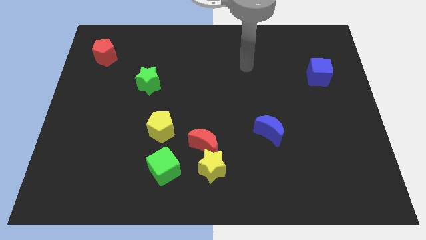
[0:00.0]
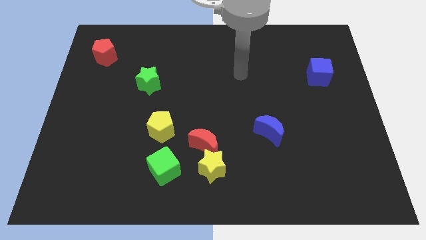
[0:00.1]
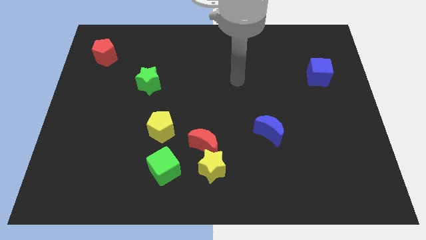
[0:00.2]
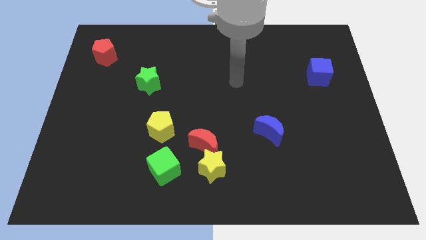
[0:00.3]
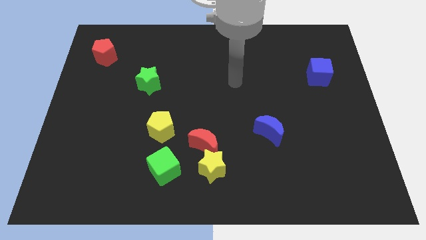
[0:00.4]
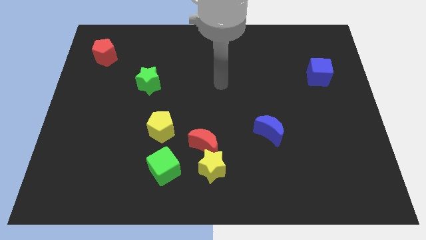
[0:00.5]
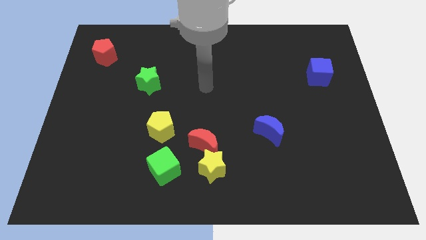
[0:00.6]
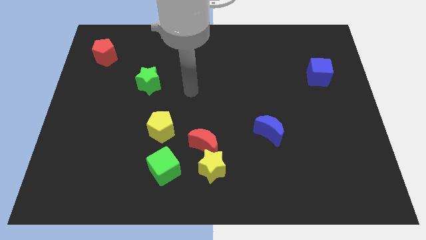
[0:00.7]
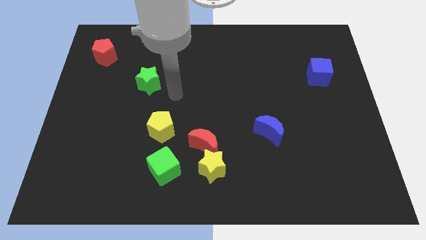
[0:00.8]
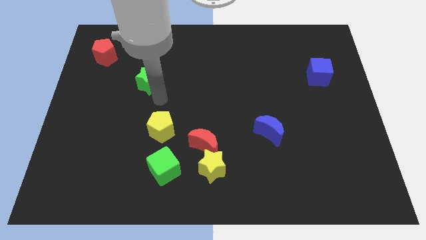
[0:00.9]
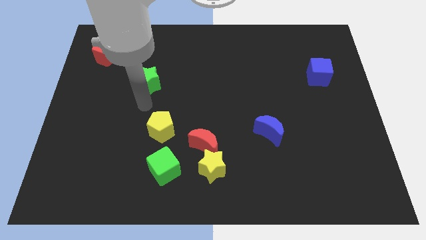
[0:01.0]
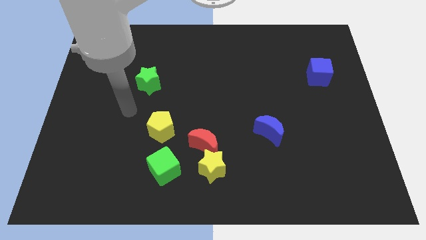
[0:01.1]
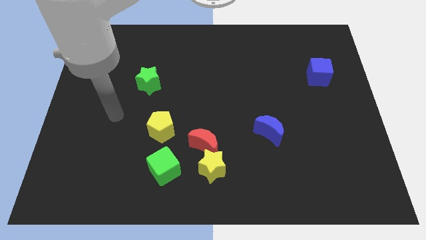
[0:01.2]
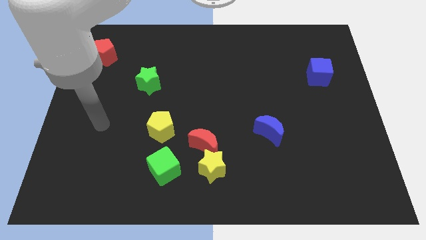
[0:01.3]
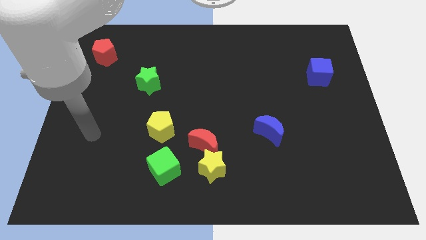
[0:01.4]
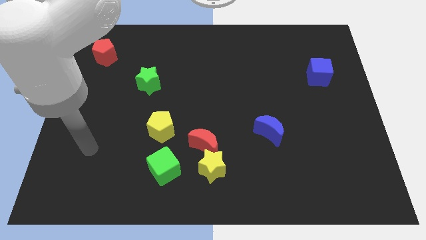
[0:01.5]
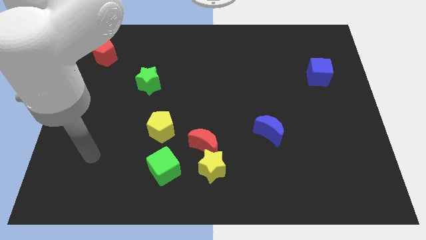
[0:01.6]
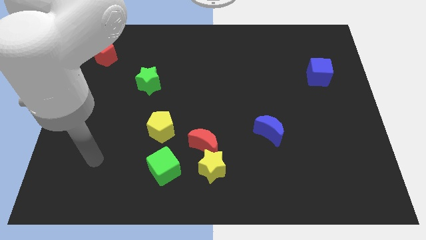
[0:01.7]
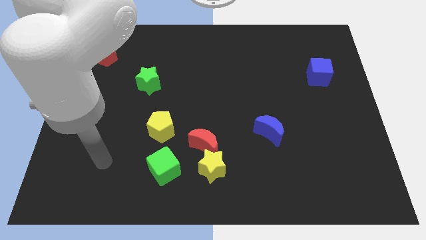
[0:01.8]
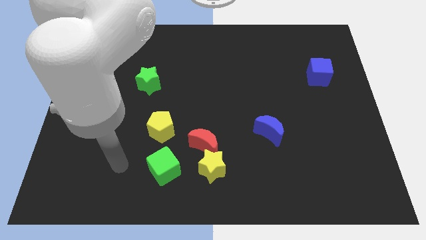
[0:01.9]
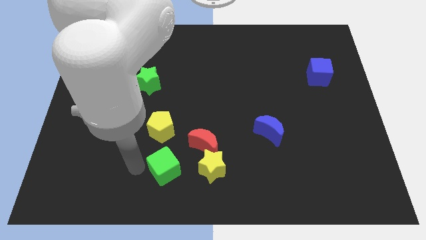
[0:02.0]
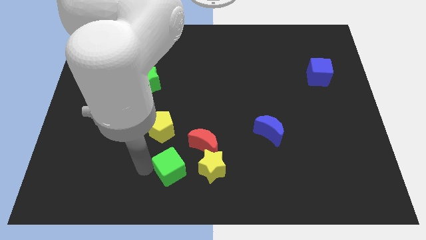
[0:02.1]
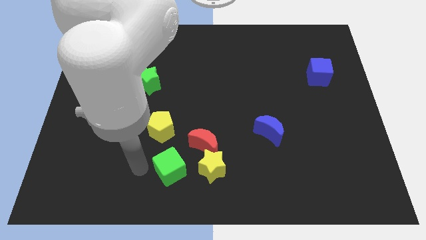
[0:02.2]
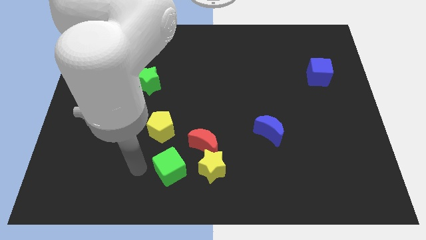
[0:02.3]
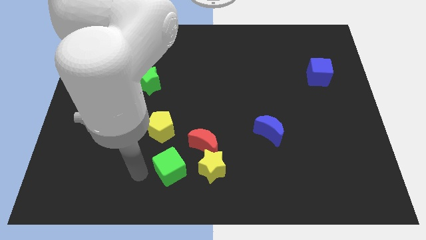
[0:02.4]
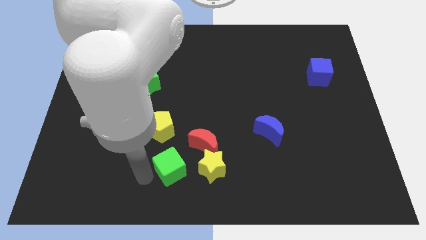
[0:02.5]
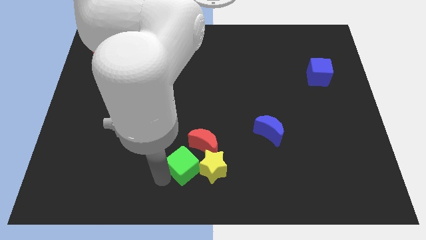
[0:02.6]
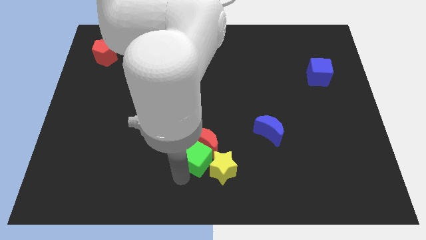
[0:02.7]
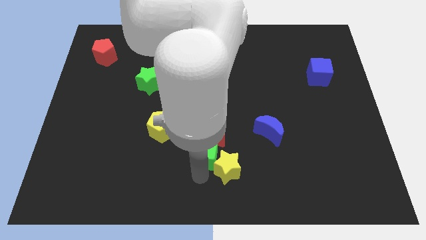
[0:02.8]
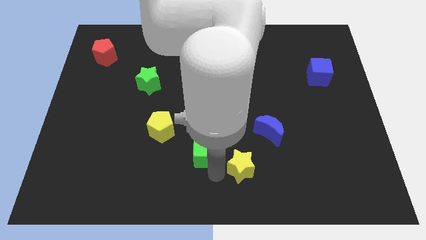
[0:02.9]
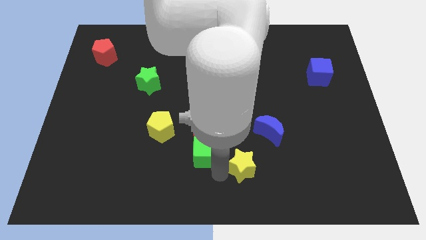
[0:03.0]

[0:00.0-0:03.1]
place the green cube at the bottom of the red crescent

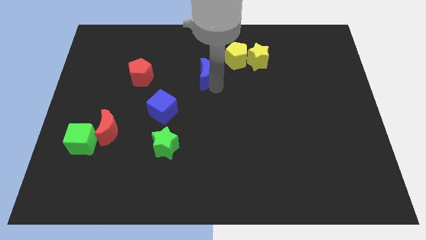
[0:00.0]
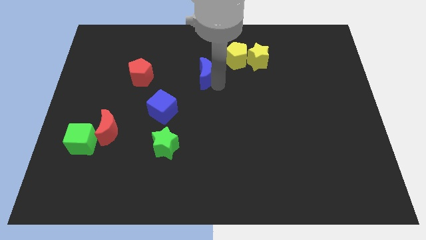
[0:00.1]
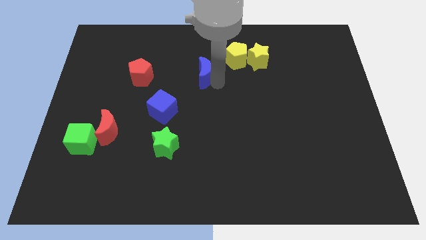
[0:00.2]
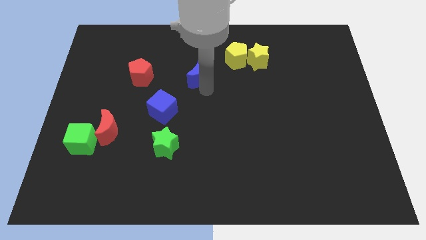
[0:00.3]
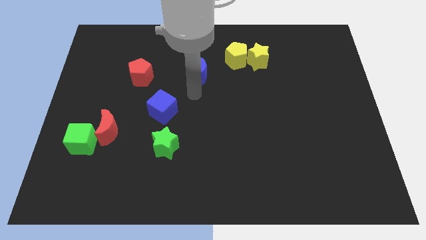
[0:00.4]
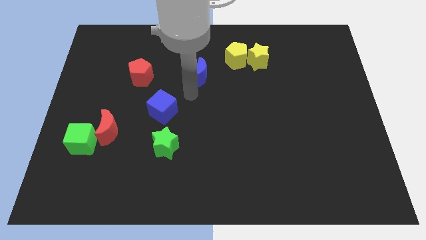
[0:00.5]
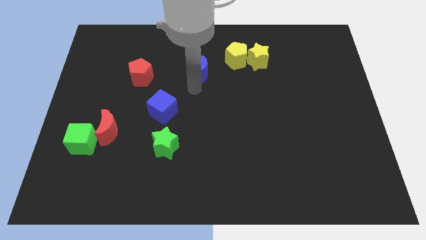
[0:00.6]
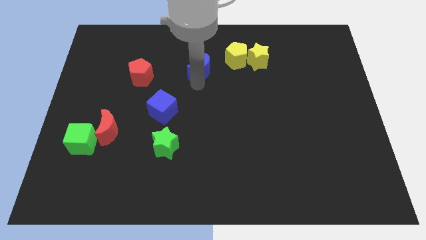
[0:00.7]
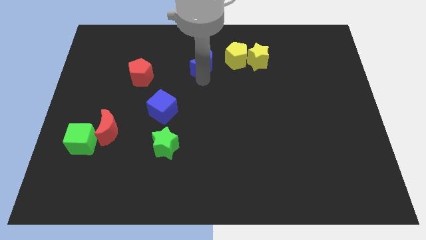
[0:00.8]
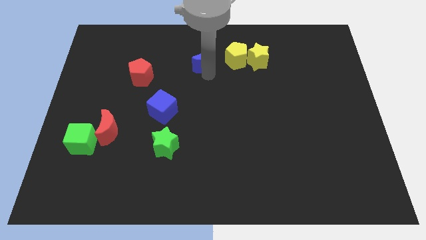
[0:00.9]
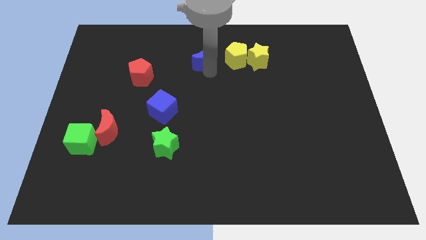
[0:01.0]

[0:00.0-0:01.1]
place the blue crescent to the left of yellow pentagon

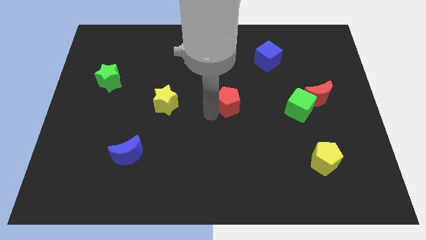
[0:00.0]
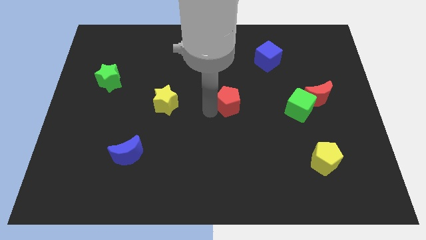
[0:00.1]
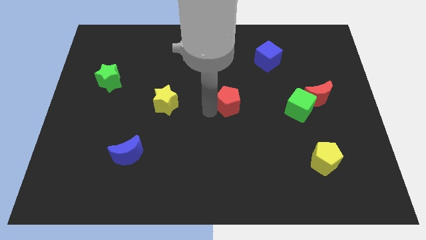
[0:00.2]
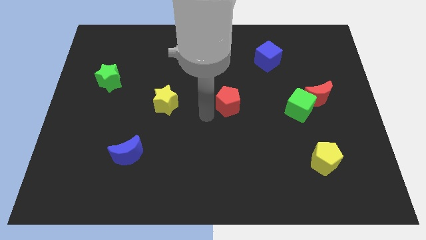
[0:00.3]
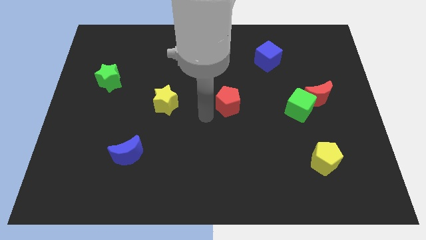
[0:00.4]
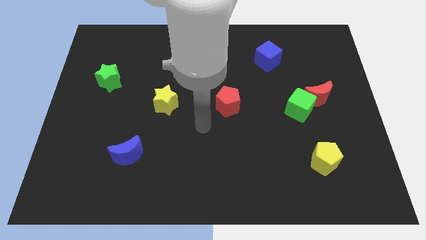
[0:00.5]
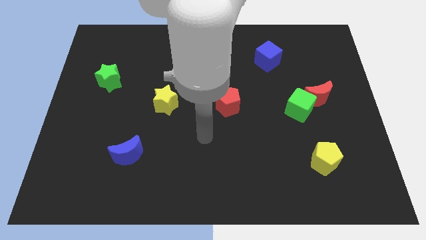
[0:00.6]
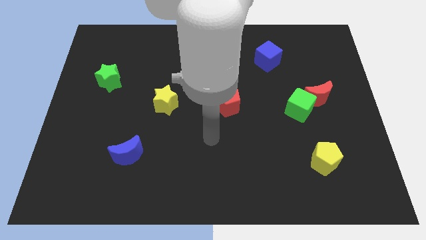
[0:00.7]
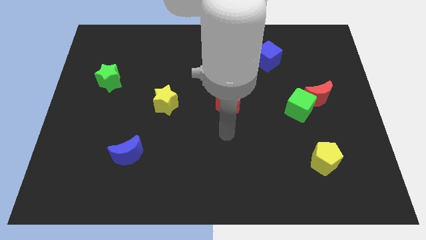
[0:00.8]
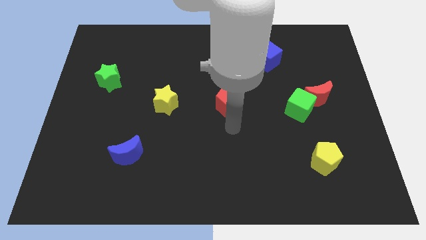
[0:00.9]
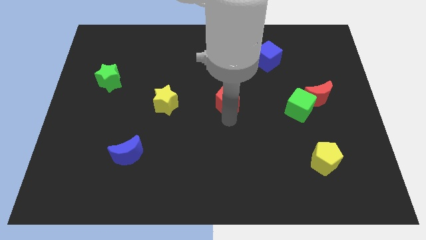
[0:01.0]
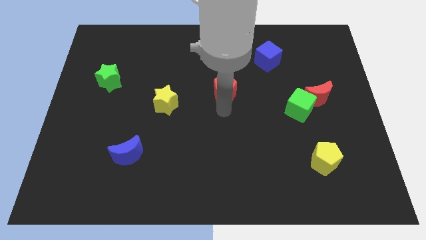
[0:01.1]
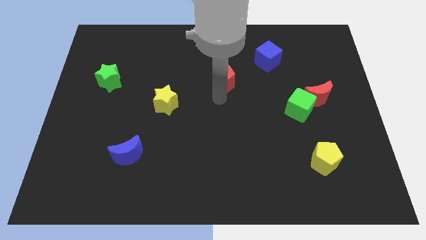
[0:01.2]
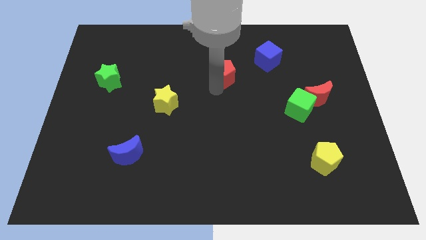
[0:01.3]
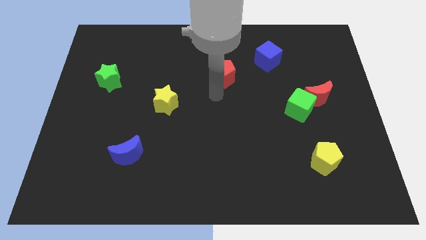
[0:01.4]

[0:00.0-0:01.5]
push the red pentagon towards the bottom left side of the blue cube

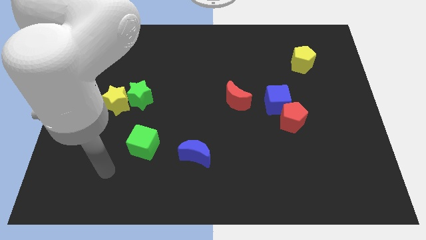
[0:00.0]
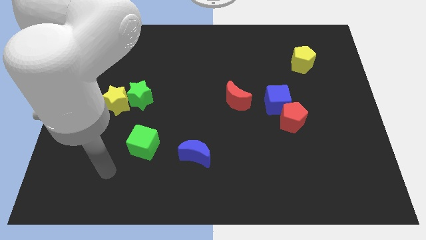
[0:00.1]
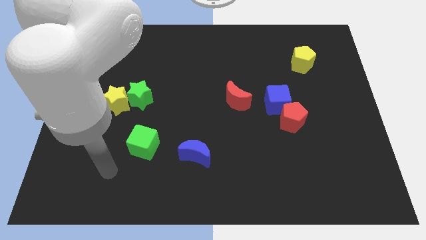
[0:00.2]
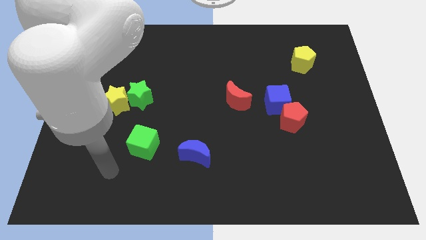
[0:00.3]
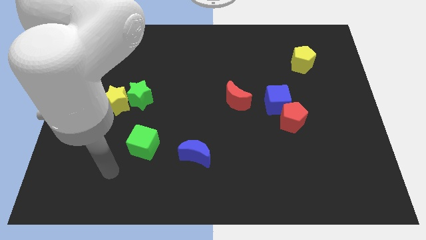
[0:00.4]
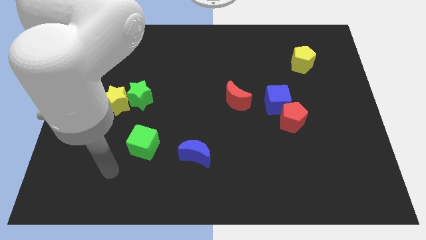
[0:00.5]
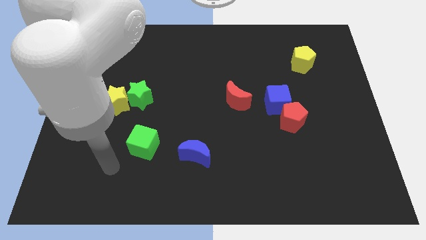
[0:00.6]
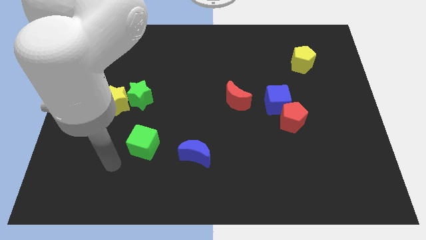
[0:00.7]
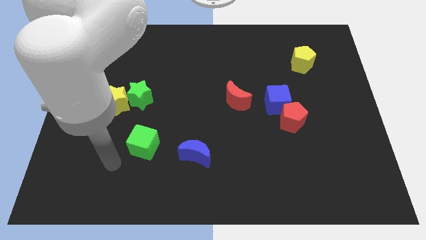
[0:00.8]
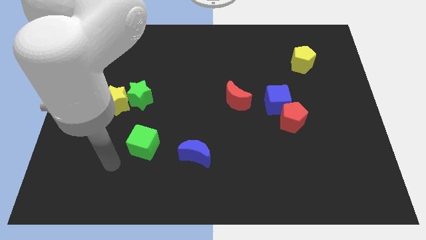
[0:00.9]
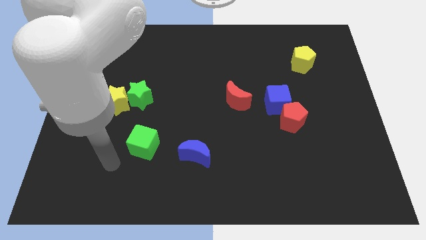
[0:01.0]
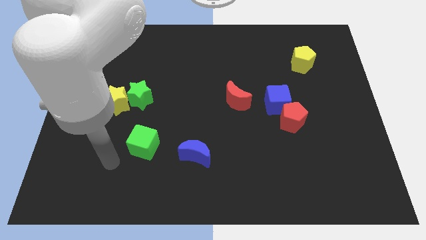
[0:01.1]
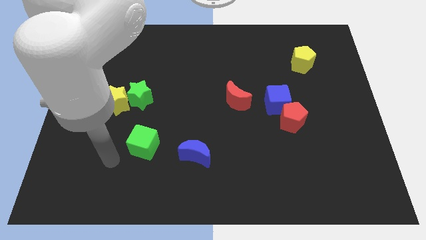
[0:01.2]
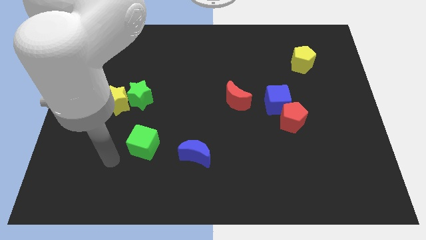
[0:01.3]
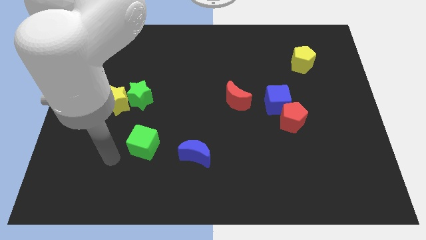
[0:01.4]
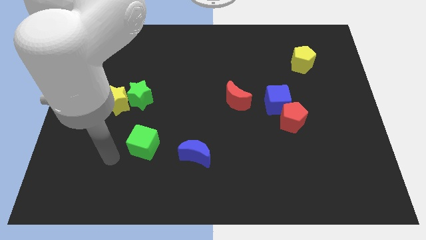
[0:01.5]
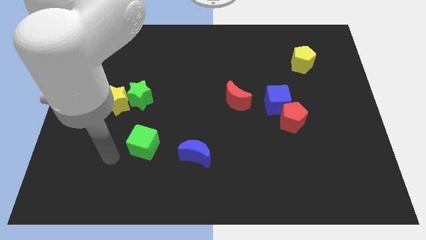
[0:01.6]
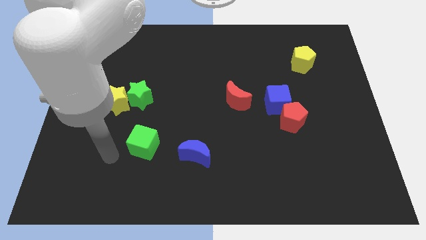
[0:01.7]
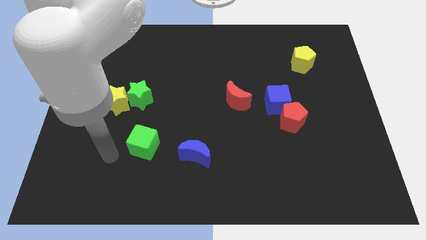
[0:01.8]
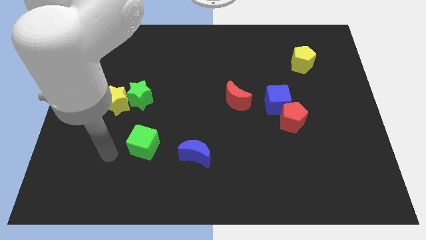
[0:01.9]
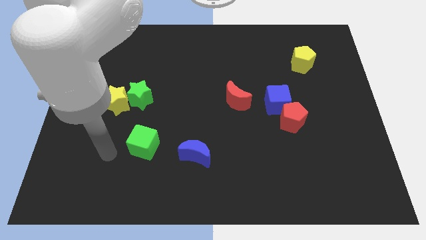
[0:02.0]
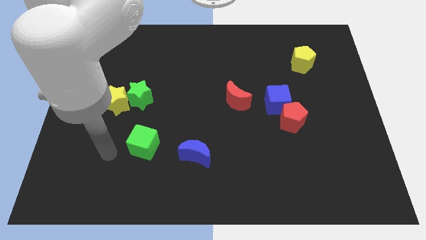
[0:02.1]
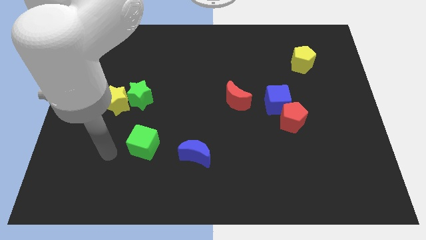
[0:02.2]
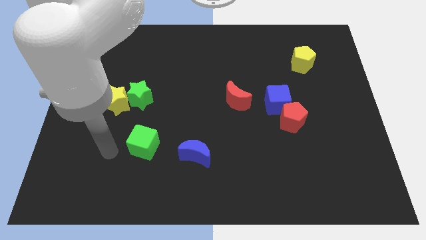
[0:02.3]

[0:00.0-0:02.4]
move the arm to the left of the green cube

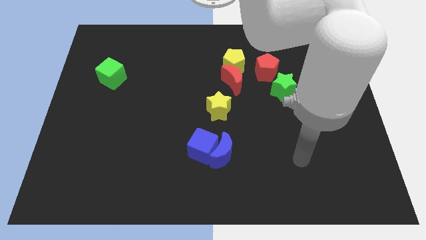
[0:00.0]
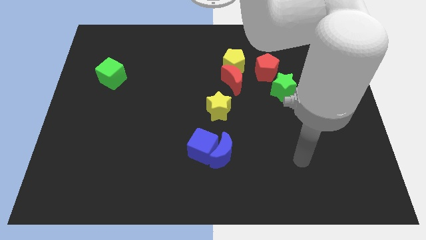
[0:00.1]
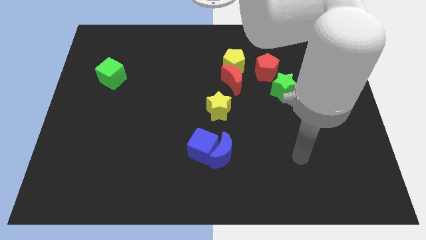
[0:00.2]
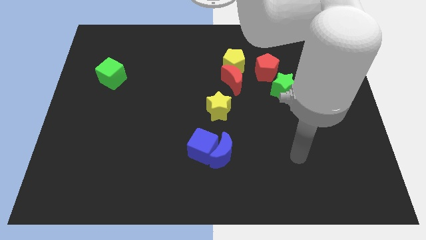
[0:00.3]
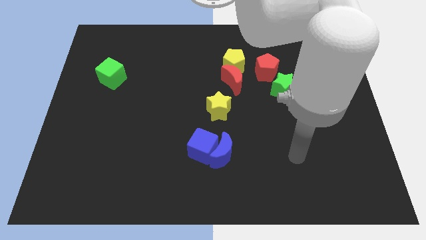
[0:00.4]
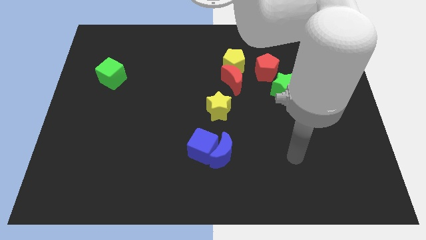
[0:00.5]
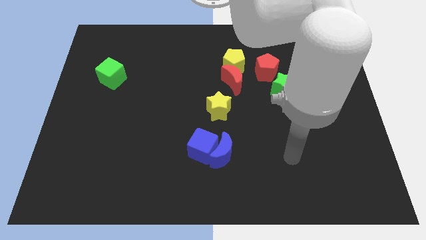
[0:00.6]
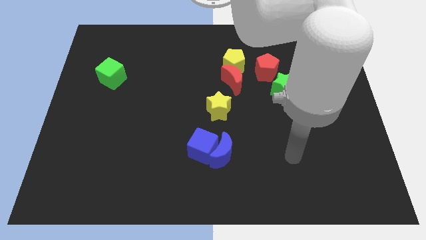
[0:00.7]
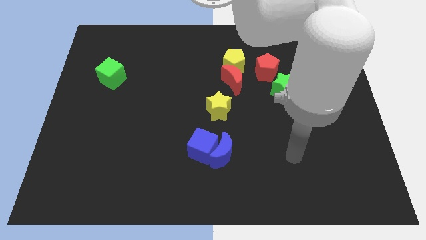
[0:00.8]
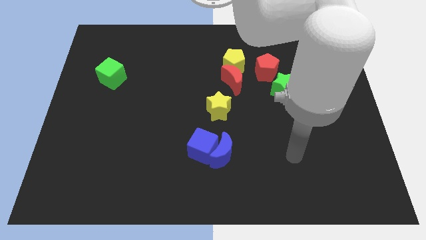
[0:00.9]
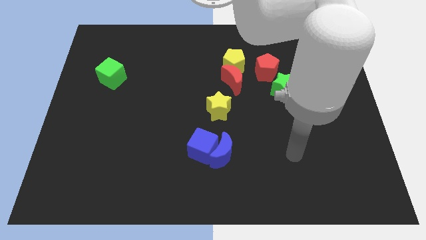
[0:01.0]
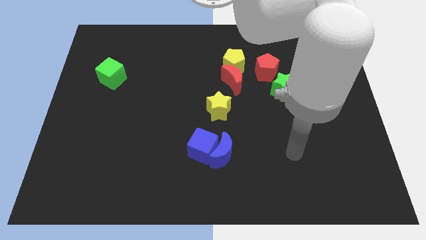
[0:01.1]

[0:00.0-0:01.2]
place the pointer at the right side of the blue moon
